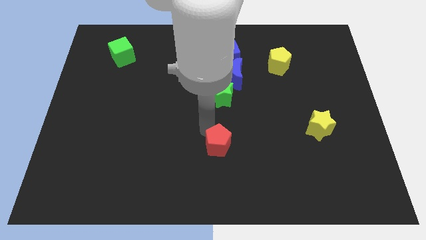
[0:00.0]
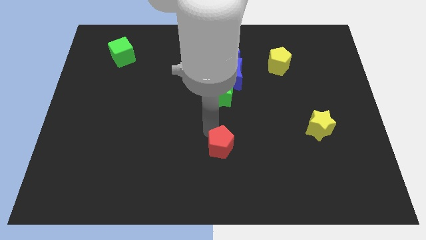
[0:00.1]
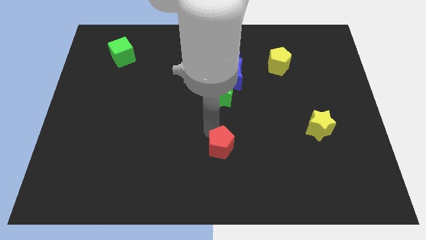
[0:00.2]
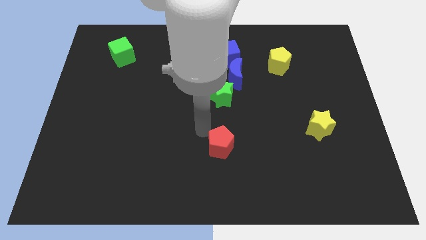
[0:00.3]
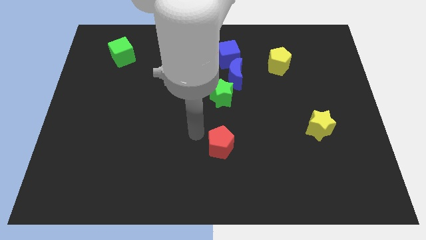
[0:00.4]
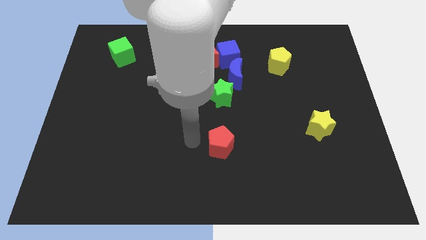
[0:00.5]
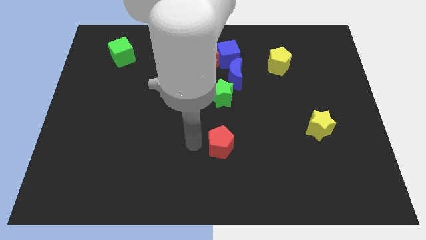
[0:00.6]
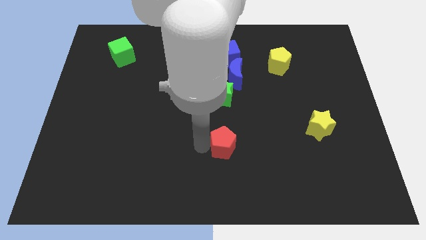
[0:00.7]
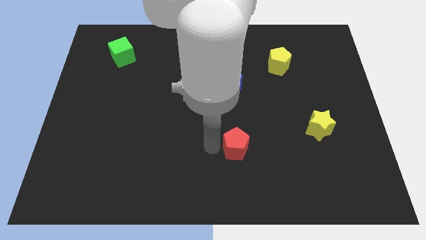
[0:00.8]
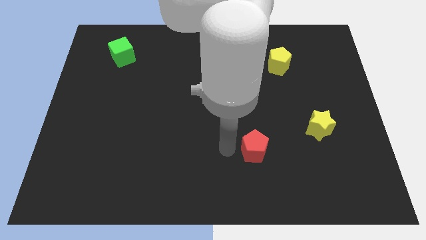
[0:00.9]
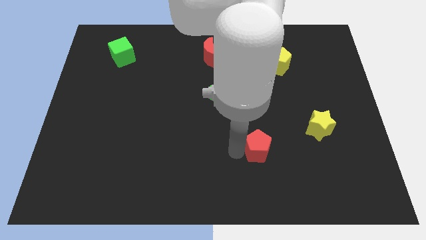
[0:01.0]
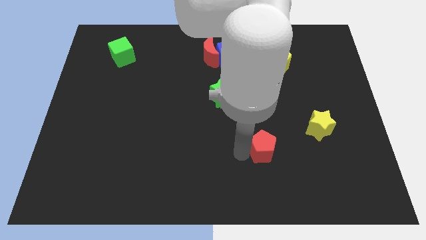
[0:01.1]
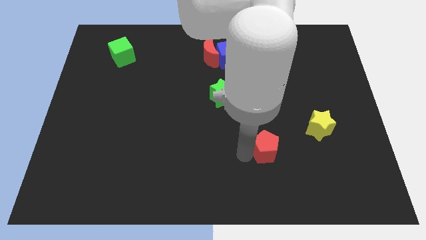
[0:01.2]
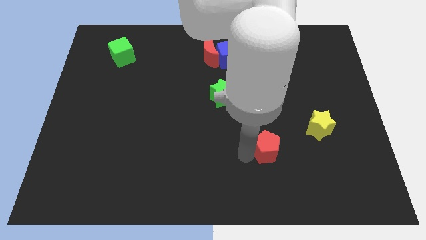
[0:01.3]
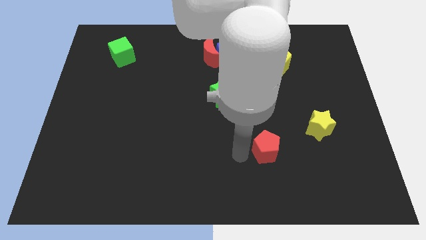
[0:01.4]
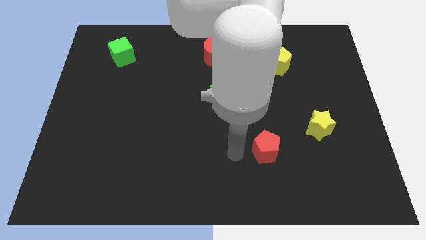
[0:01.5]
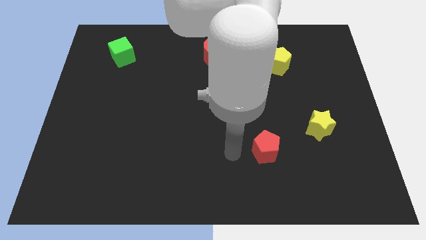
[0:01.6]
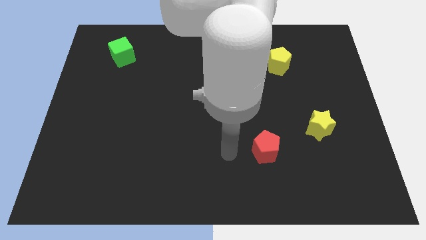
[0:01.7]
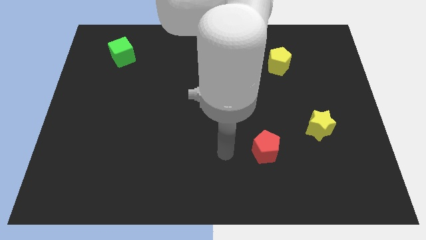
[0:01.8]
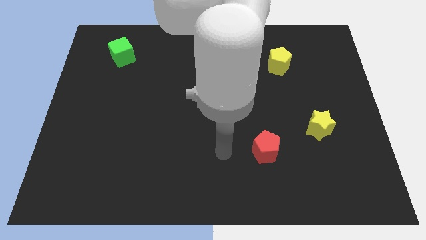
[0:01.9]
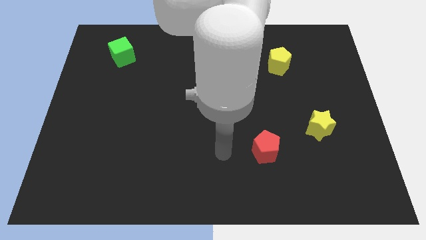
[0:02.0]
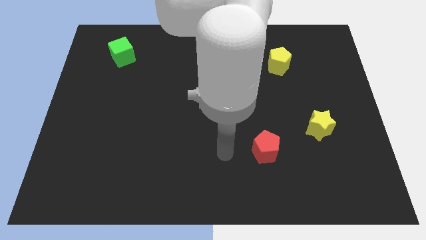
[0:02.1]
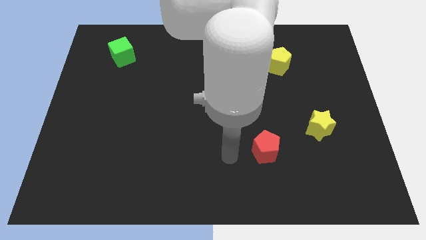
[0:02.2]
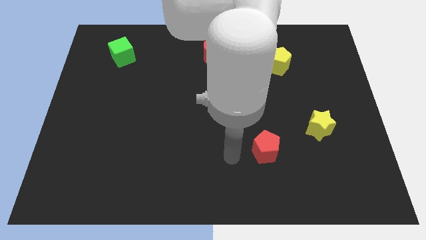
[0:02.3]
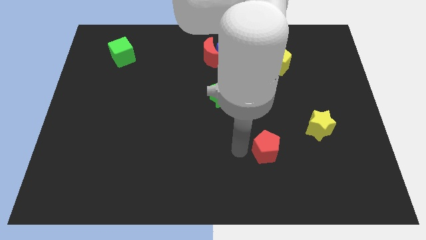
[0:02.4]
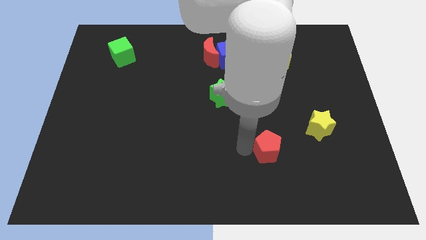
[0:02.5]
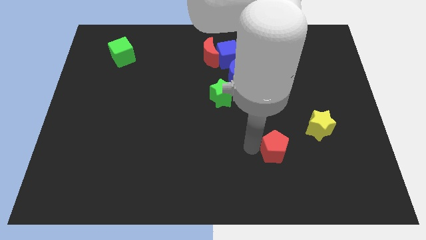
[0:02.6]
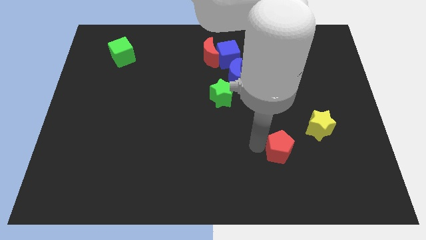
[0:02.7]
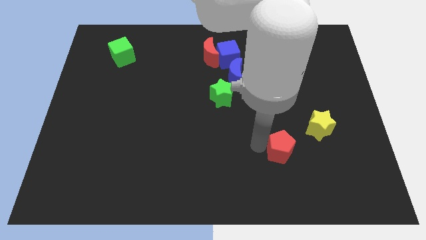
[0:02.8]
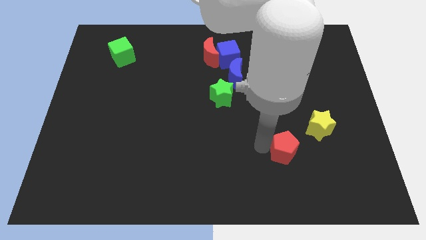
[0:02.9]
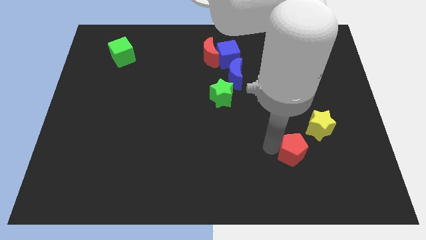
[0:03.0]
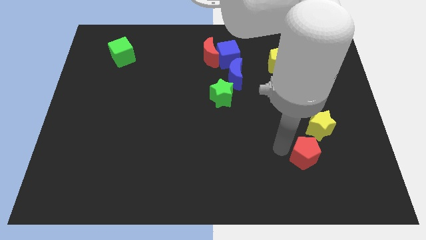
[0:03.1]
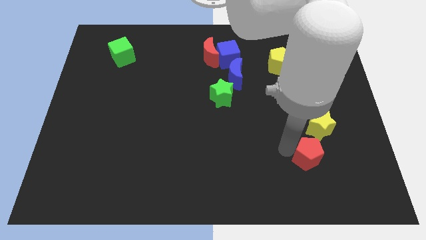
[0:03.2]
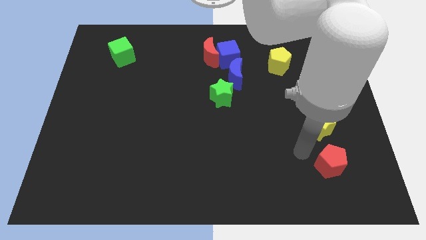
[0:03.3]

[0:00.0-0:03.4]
place the red pentagon bottom side of the yellow star

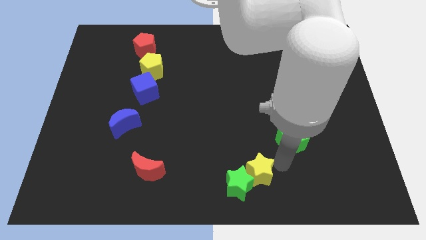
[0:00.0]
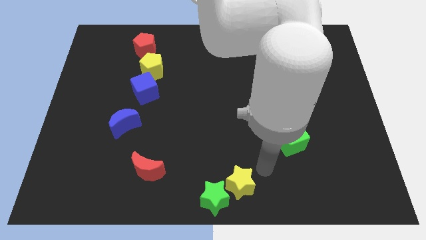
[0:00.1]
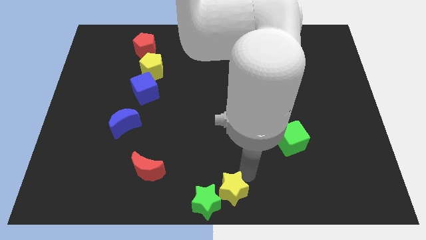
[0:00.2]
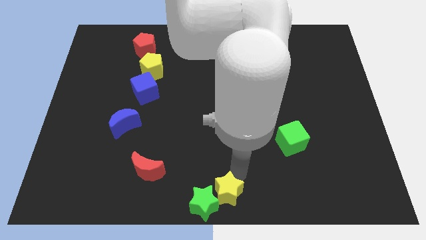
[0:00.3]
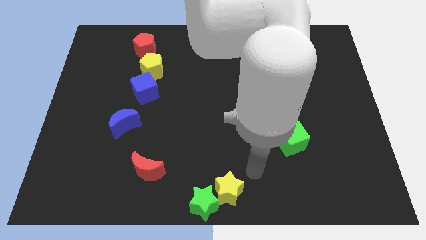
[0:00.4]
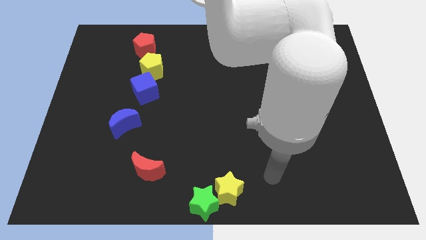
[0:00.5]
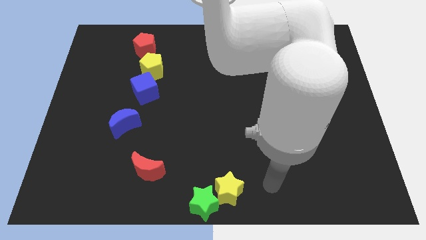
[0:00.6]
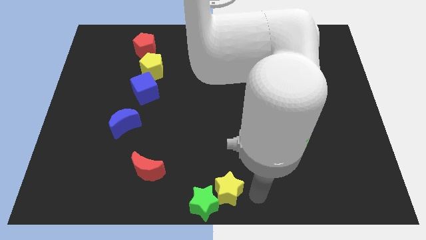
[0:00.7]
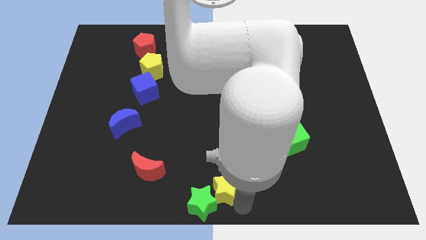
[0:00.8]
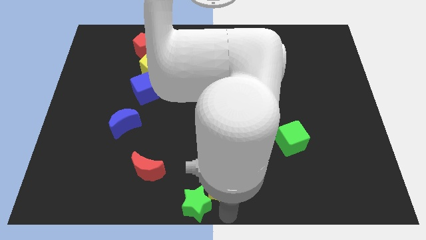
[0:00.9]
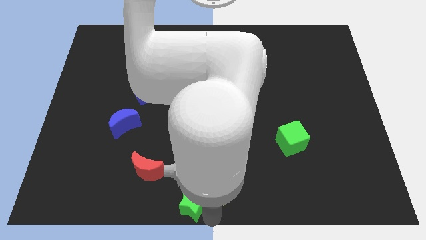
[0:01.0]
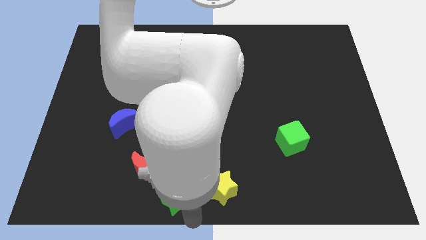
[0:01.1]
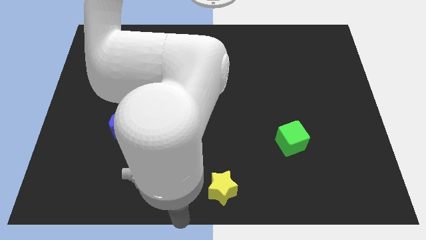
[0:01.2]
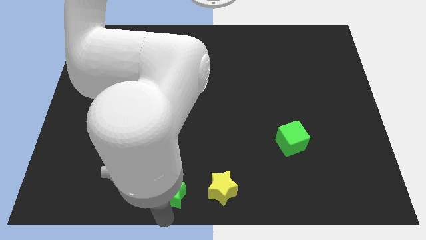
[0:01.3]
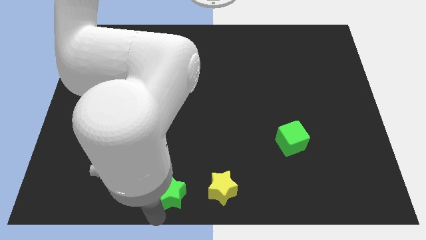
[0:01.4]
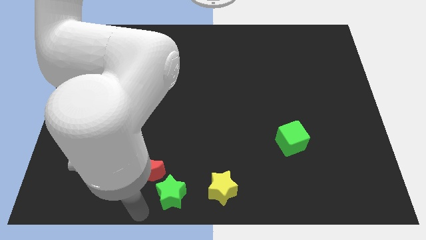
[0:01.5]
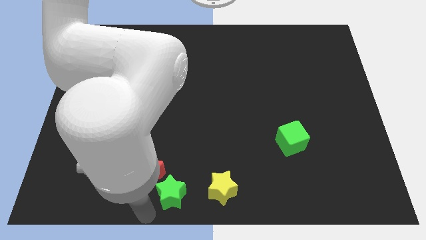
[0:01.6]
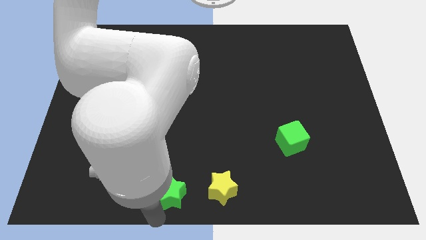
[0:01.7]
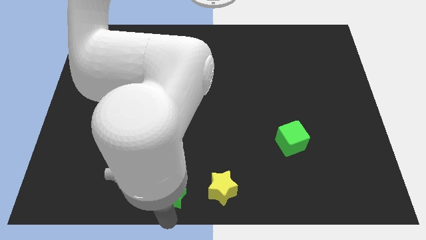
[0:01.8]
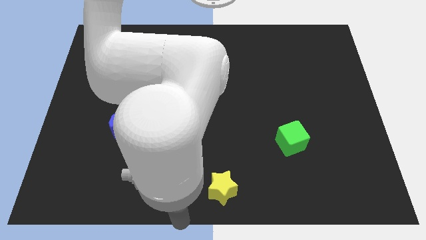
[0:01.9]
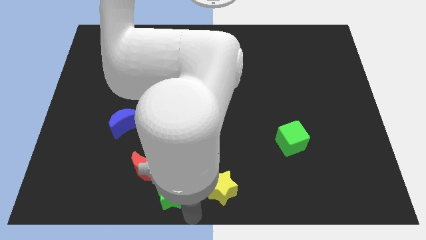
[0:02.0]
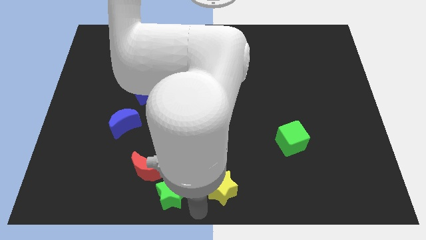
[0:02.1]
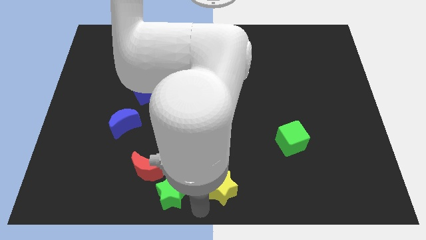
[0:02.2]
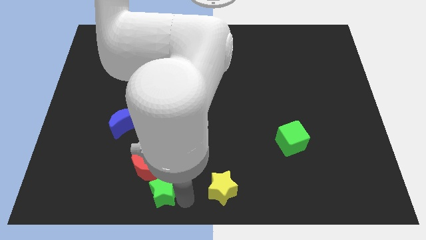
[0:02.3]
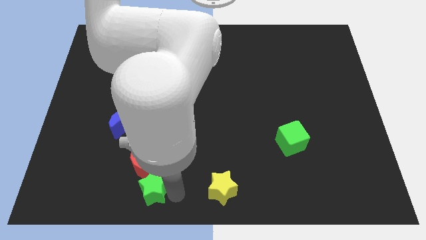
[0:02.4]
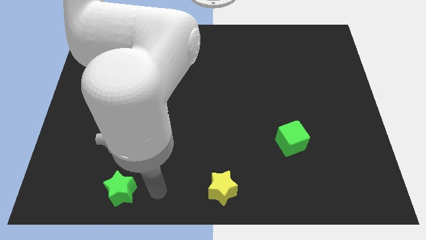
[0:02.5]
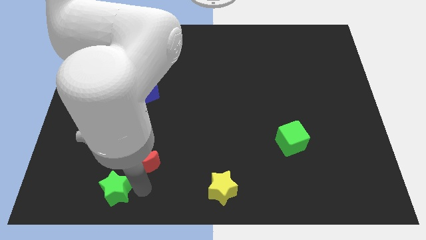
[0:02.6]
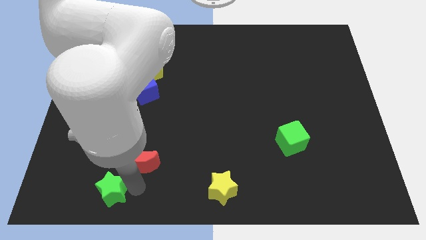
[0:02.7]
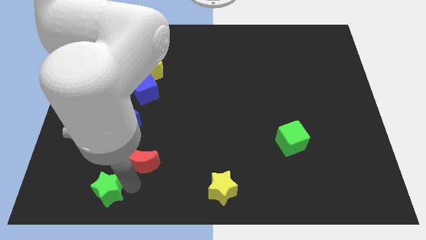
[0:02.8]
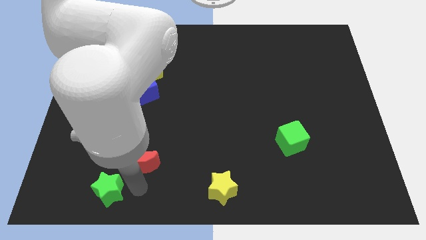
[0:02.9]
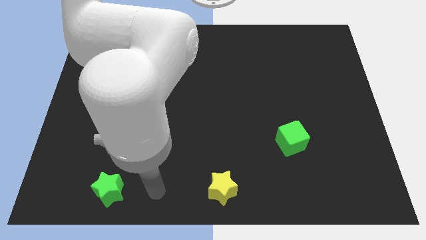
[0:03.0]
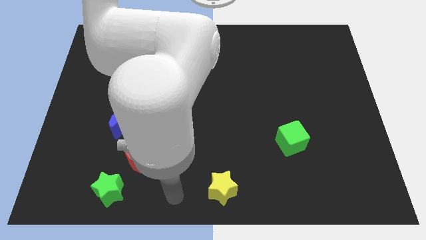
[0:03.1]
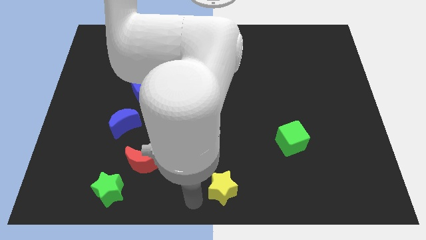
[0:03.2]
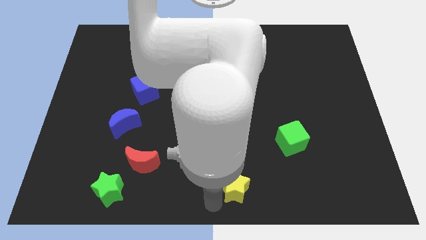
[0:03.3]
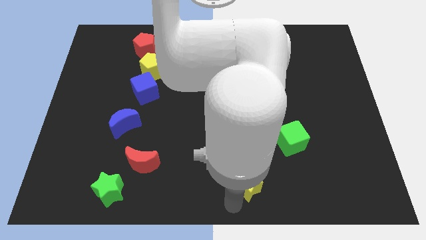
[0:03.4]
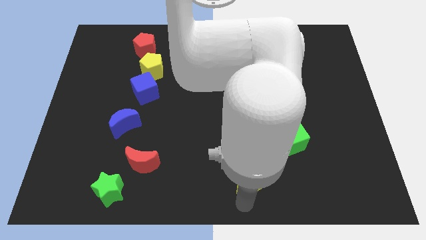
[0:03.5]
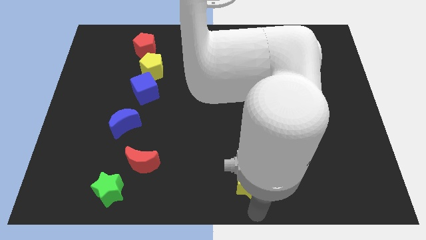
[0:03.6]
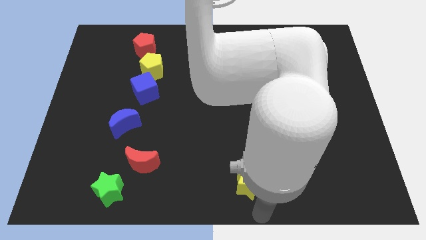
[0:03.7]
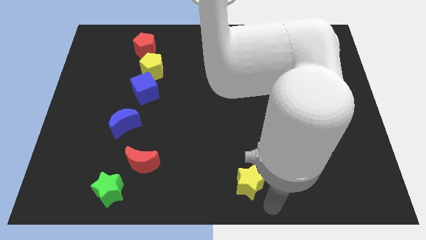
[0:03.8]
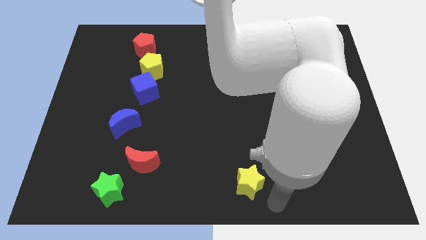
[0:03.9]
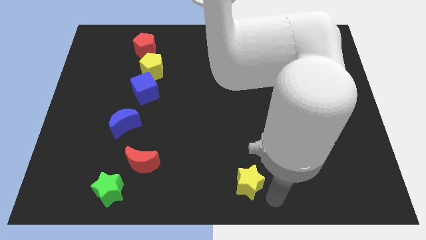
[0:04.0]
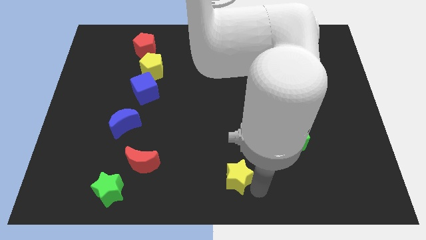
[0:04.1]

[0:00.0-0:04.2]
separate the green star from the yellow star

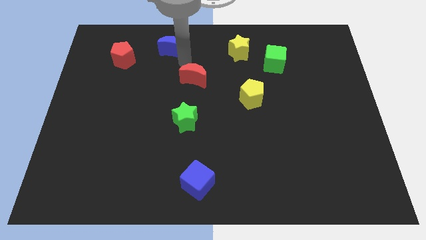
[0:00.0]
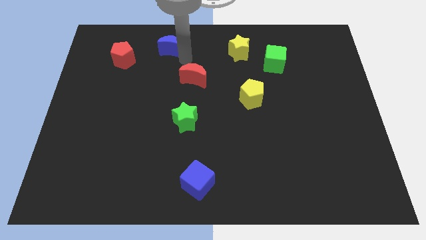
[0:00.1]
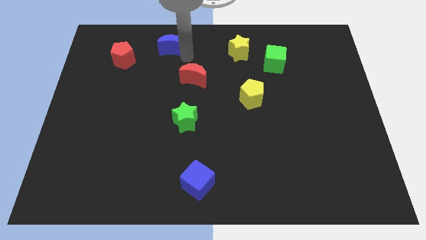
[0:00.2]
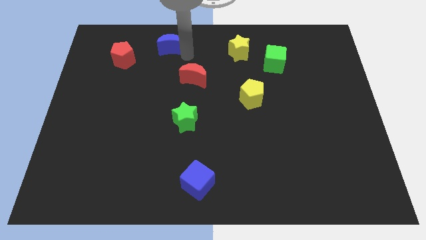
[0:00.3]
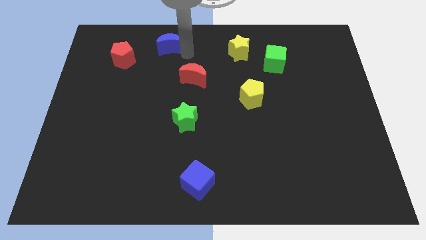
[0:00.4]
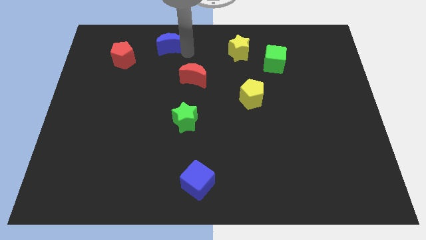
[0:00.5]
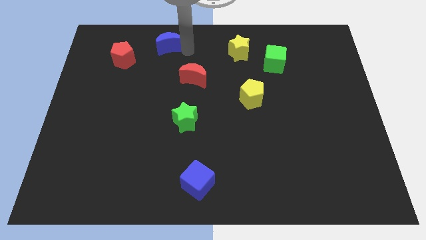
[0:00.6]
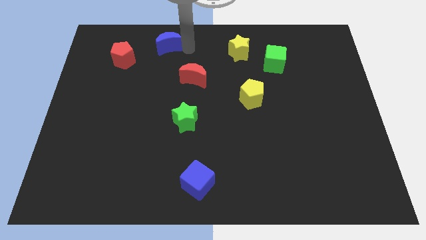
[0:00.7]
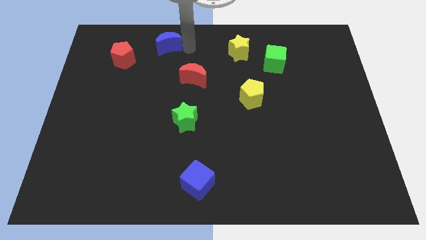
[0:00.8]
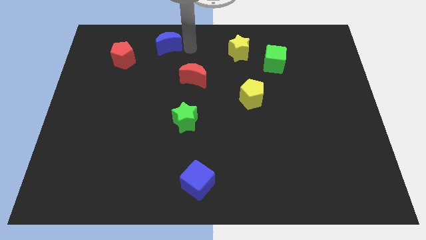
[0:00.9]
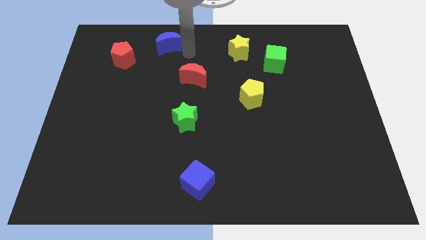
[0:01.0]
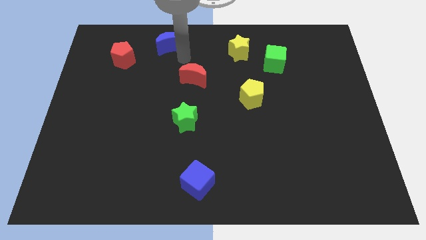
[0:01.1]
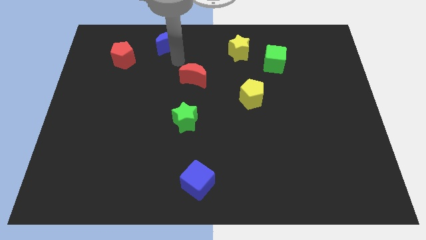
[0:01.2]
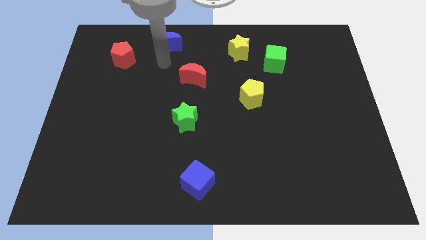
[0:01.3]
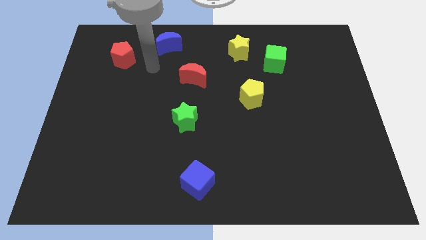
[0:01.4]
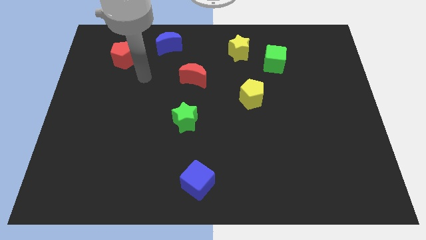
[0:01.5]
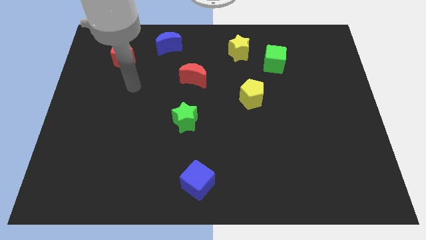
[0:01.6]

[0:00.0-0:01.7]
slide the blue moon diagonally on the top right side of the red moon
